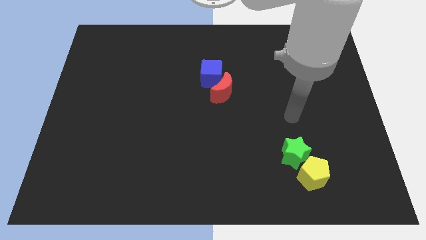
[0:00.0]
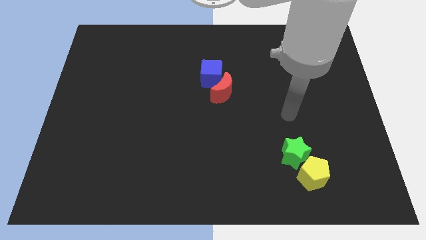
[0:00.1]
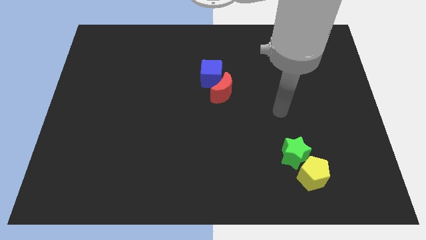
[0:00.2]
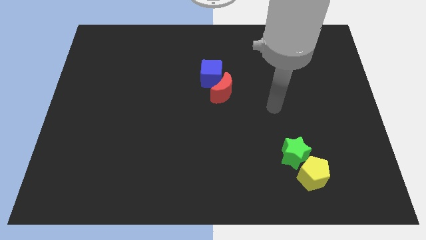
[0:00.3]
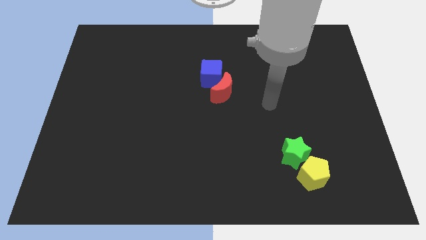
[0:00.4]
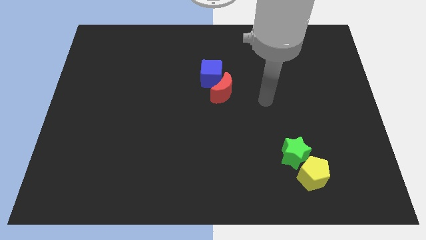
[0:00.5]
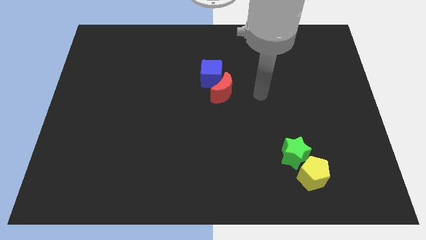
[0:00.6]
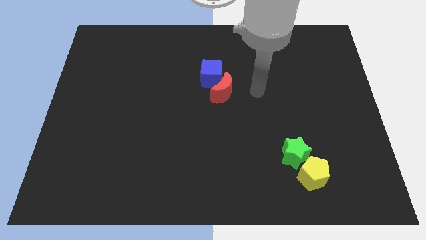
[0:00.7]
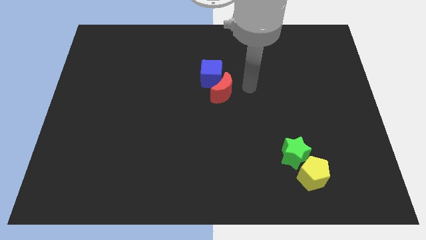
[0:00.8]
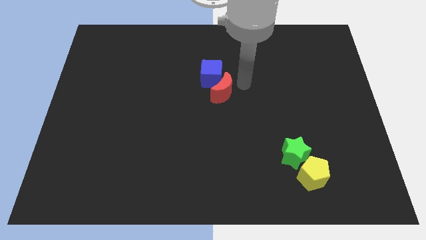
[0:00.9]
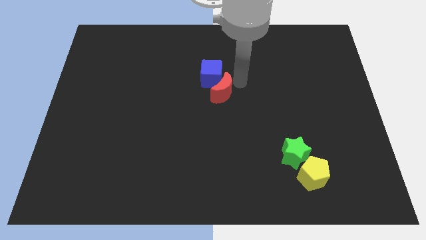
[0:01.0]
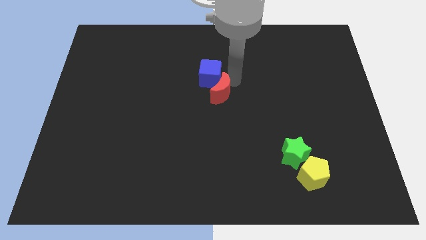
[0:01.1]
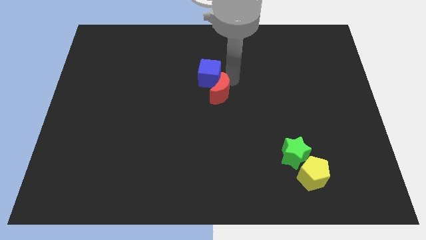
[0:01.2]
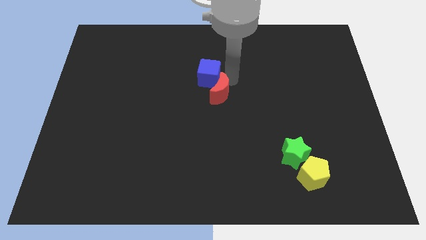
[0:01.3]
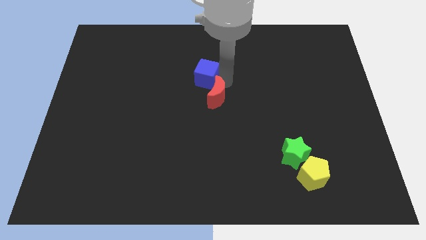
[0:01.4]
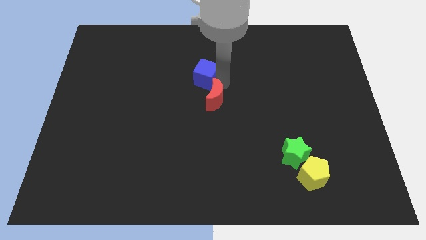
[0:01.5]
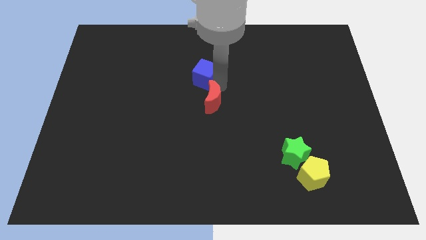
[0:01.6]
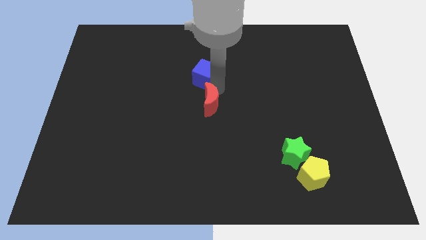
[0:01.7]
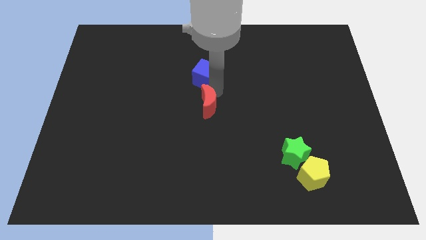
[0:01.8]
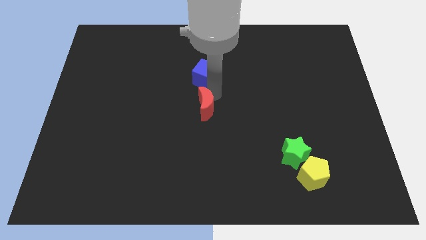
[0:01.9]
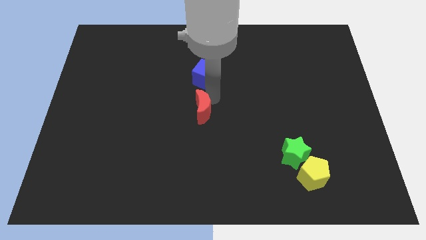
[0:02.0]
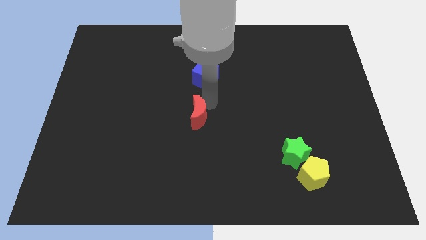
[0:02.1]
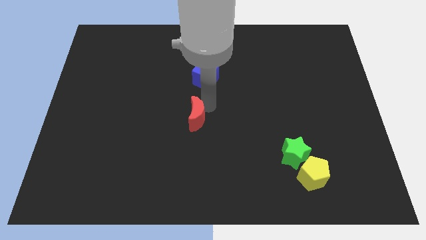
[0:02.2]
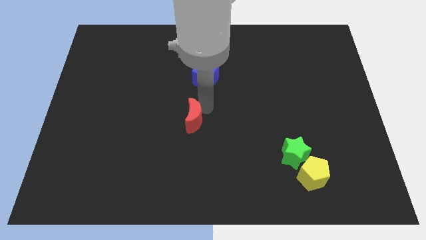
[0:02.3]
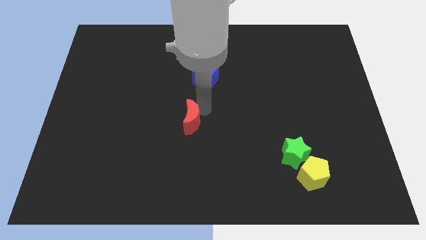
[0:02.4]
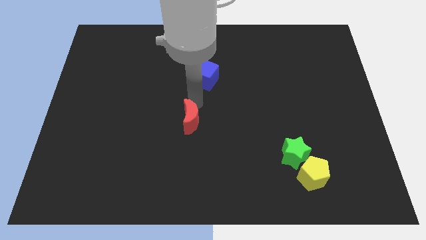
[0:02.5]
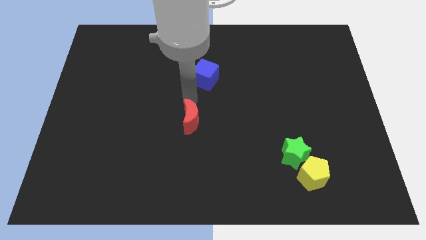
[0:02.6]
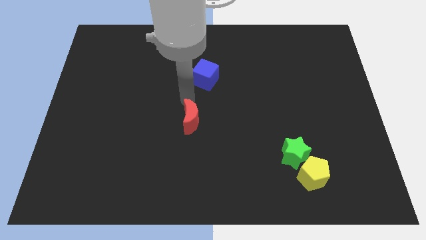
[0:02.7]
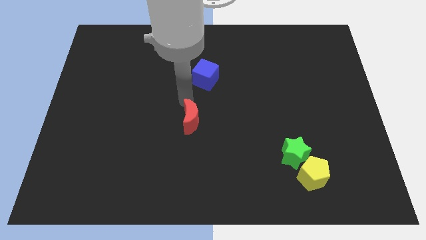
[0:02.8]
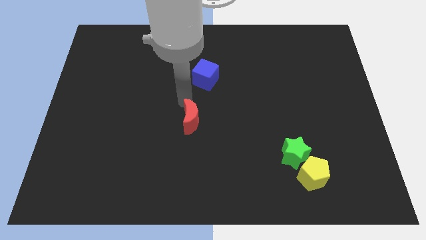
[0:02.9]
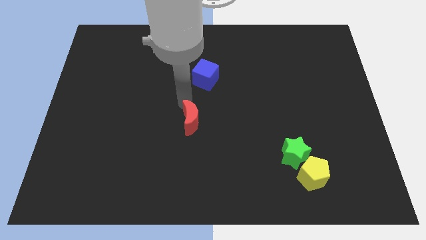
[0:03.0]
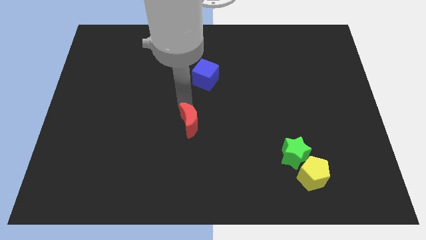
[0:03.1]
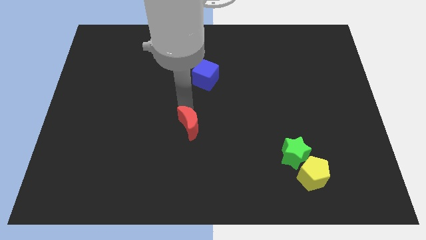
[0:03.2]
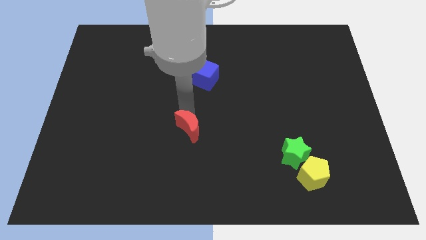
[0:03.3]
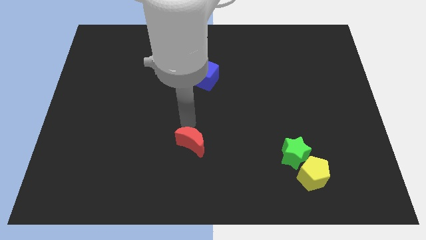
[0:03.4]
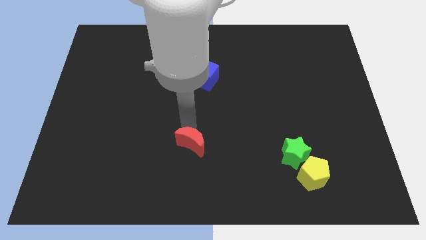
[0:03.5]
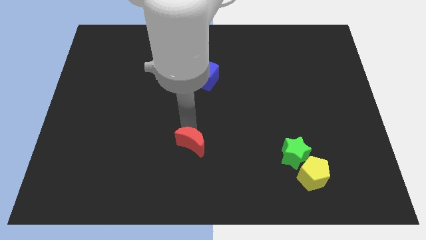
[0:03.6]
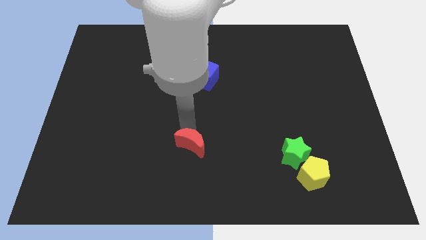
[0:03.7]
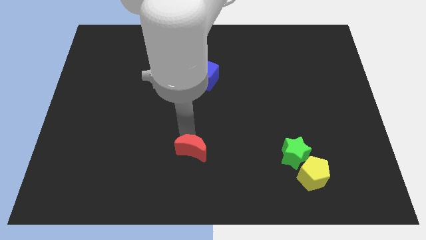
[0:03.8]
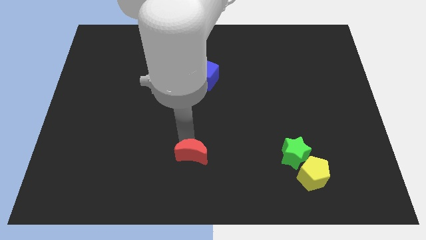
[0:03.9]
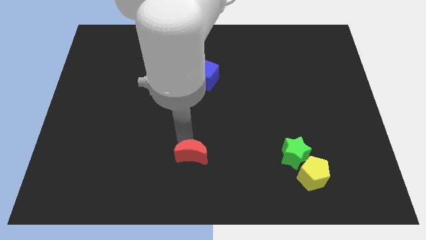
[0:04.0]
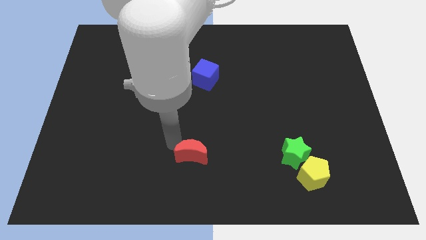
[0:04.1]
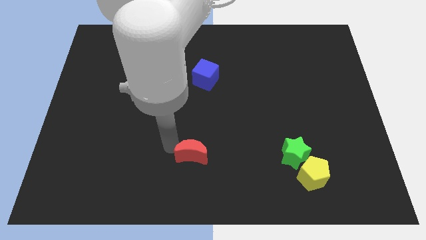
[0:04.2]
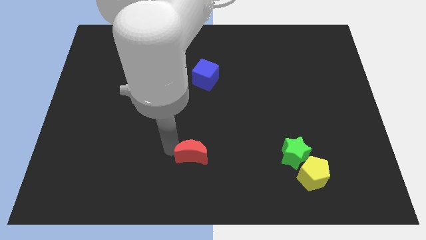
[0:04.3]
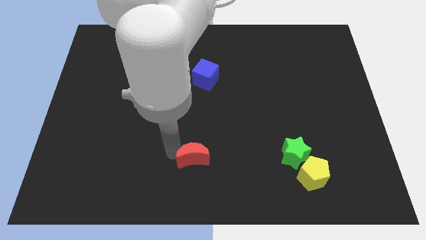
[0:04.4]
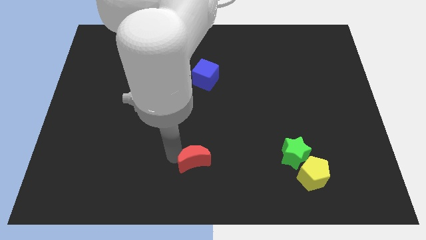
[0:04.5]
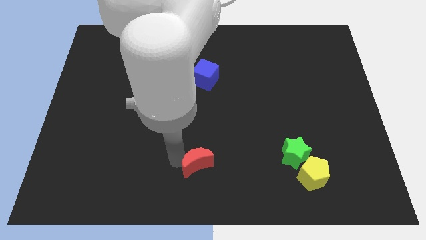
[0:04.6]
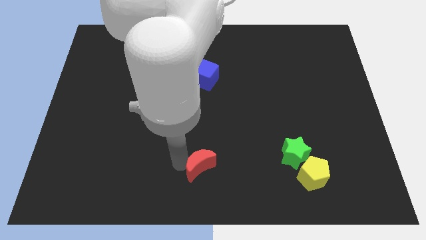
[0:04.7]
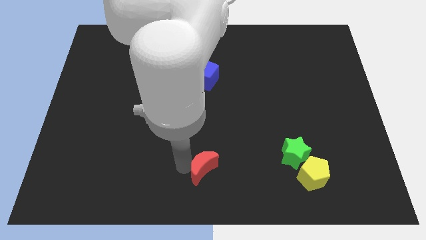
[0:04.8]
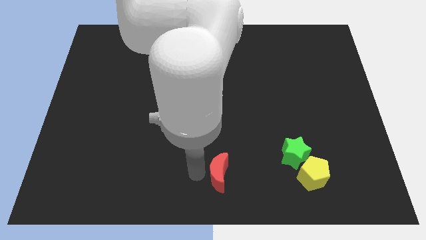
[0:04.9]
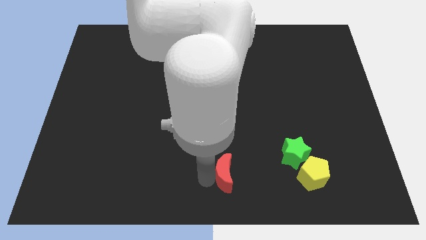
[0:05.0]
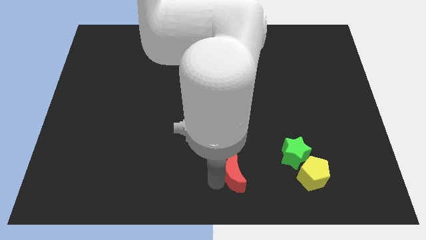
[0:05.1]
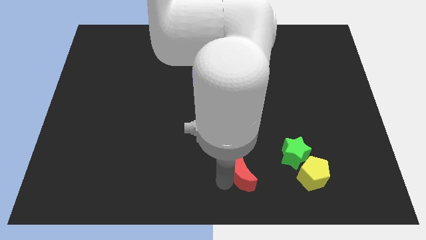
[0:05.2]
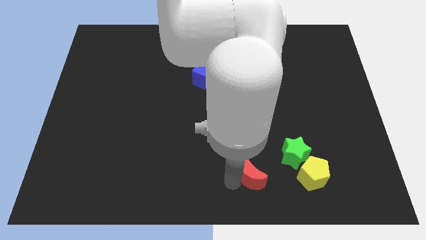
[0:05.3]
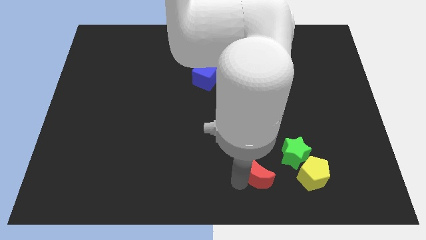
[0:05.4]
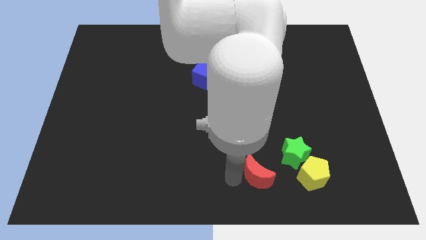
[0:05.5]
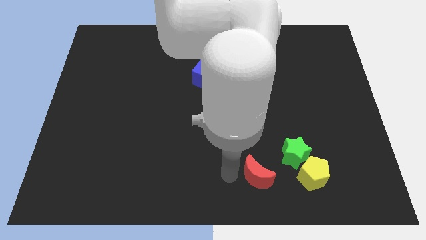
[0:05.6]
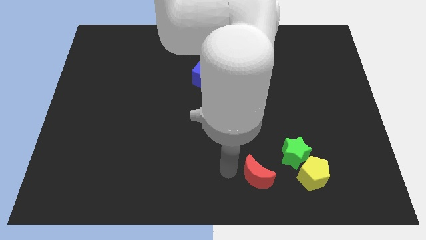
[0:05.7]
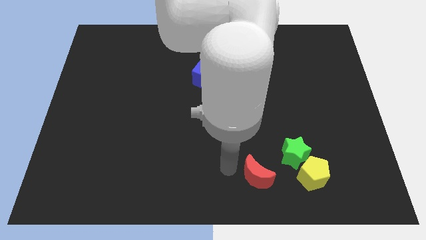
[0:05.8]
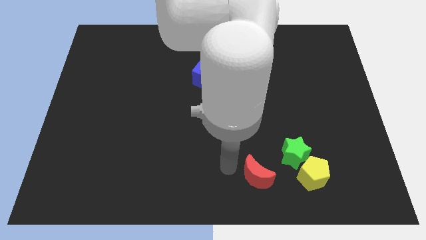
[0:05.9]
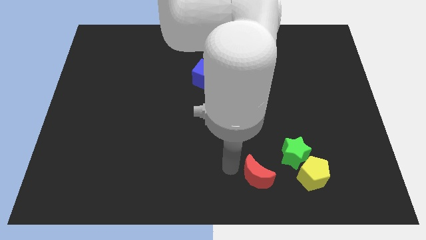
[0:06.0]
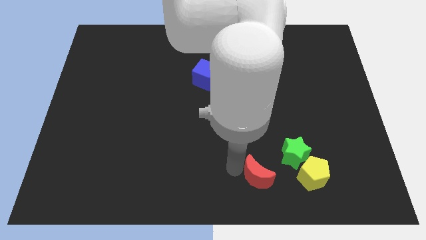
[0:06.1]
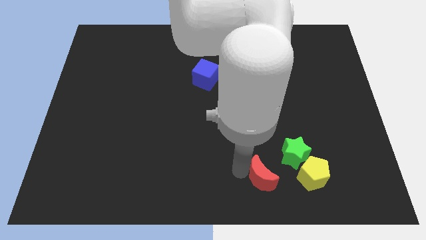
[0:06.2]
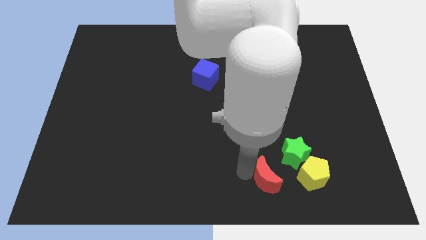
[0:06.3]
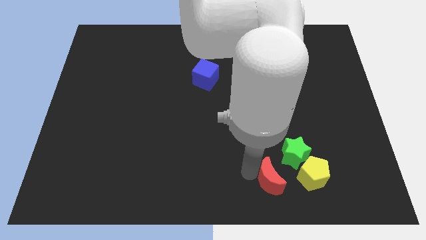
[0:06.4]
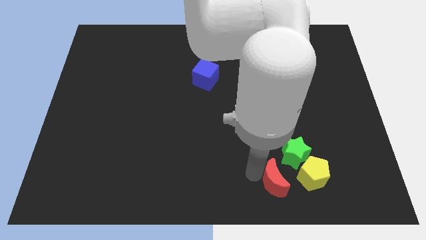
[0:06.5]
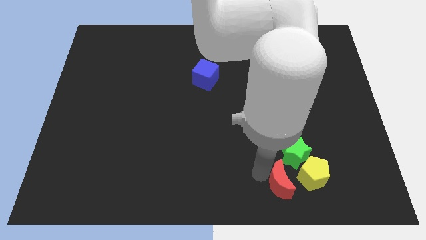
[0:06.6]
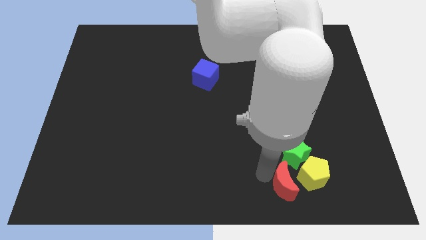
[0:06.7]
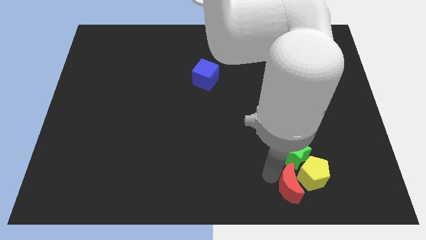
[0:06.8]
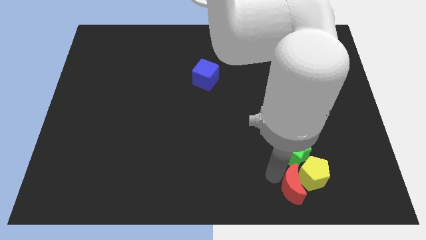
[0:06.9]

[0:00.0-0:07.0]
put the red block to the yellow pentagon

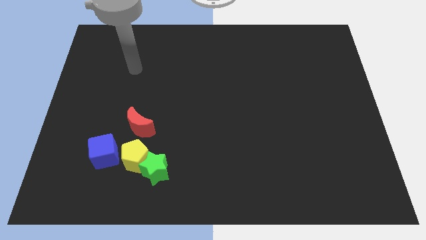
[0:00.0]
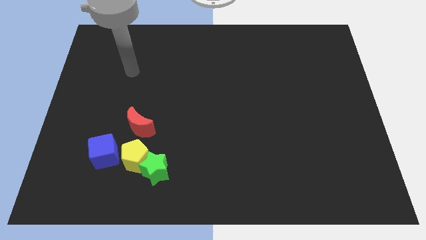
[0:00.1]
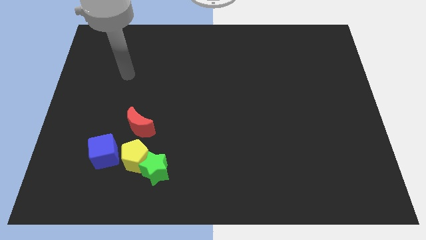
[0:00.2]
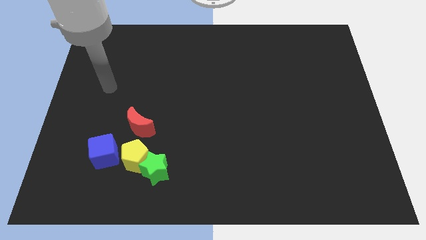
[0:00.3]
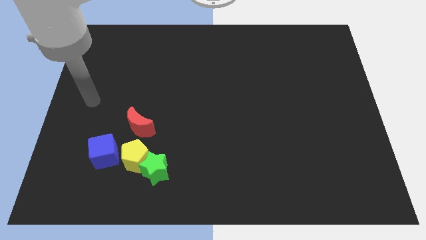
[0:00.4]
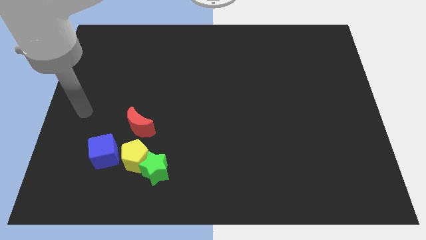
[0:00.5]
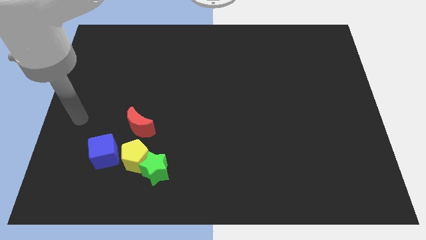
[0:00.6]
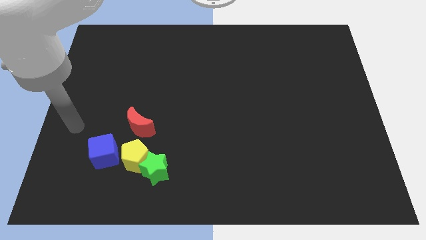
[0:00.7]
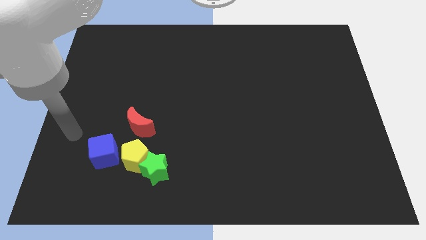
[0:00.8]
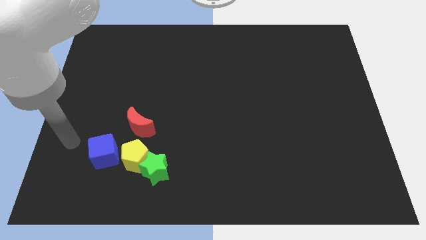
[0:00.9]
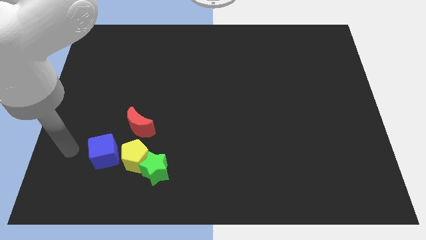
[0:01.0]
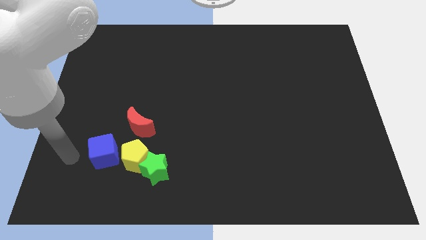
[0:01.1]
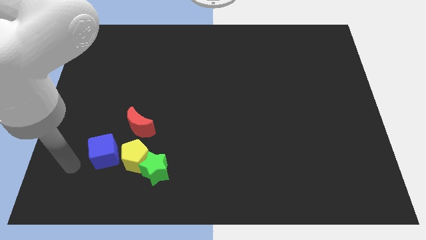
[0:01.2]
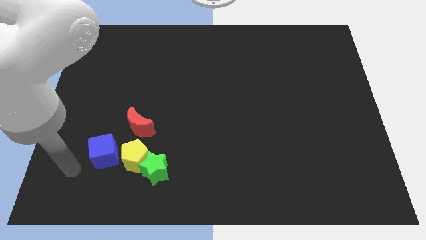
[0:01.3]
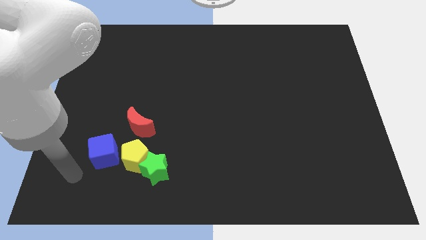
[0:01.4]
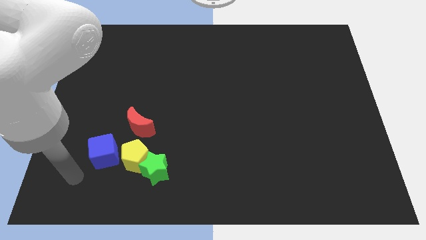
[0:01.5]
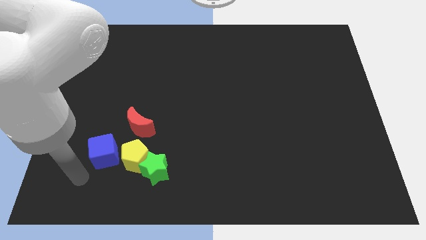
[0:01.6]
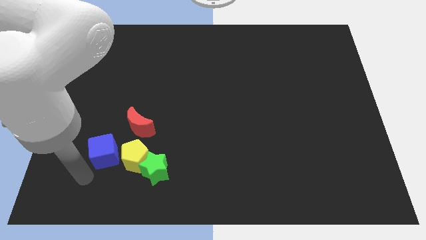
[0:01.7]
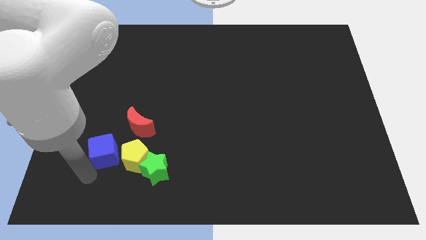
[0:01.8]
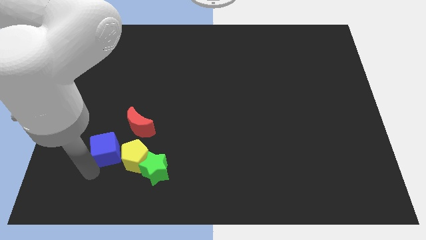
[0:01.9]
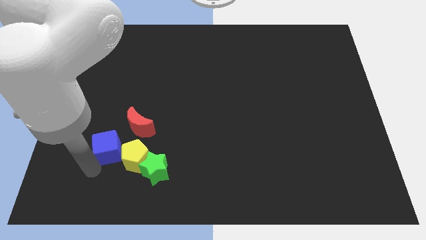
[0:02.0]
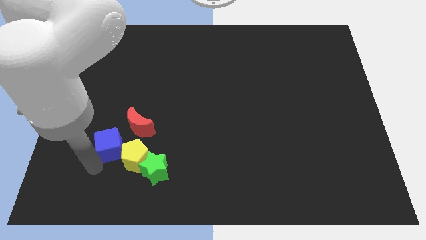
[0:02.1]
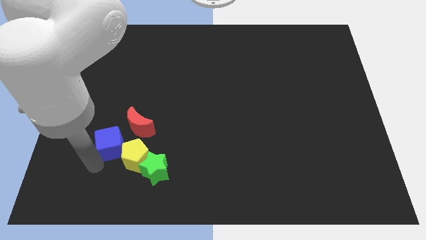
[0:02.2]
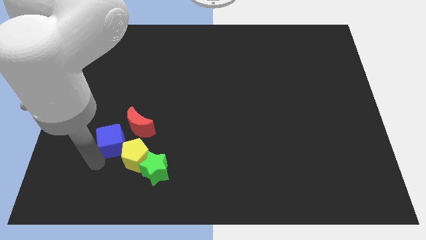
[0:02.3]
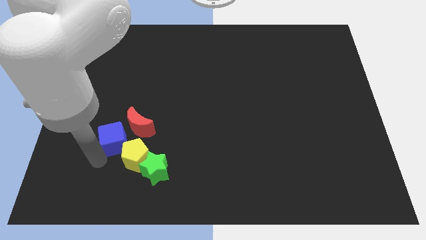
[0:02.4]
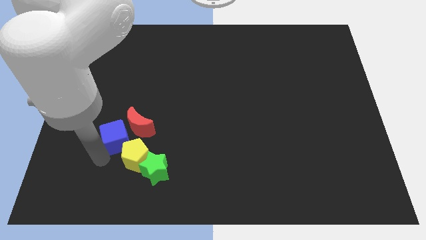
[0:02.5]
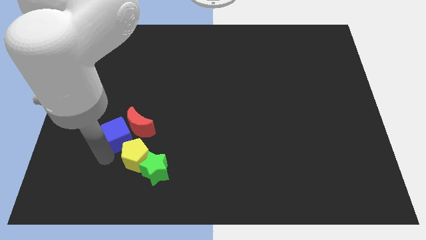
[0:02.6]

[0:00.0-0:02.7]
put the cube to the red moon
